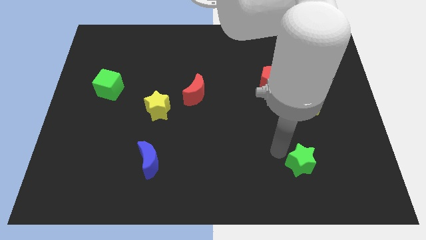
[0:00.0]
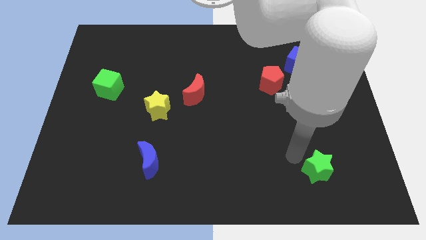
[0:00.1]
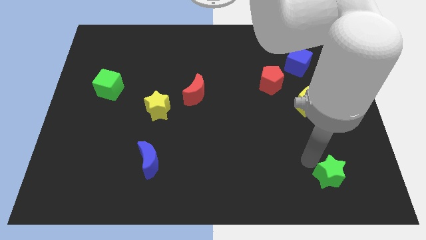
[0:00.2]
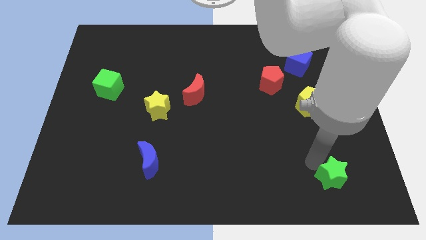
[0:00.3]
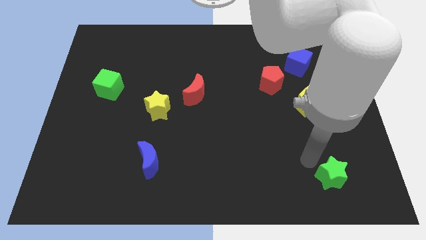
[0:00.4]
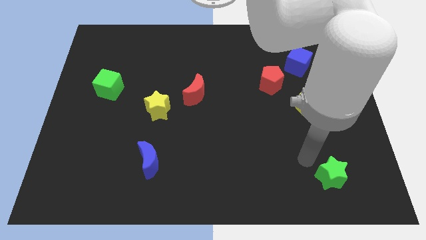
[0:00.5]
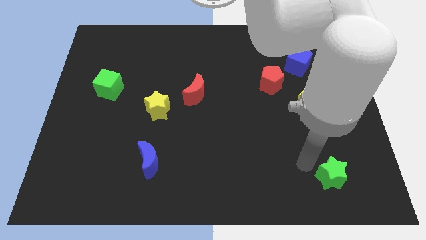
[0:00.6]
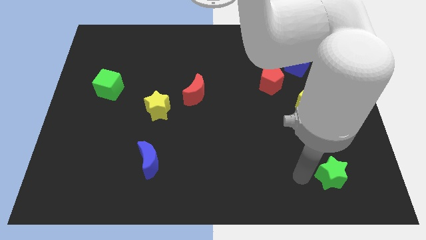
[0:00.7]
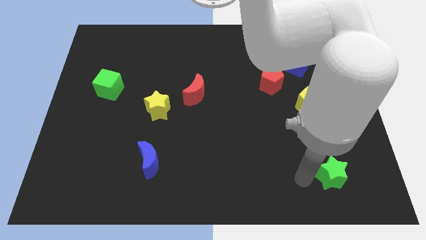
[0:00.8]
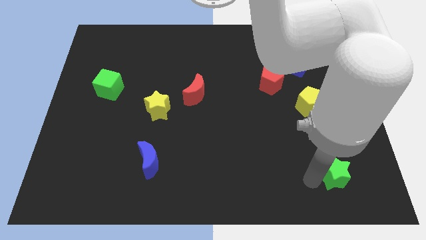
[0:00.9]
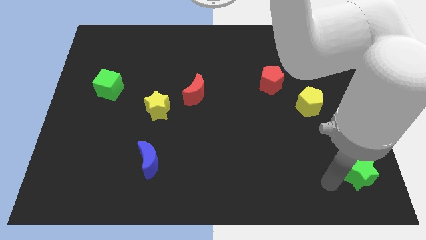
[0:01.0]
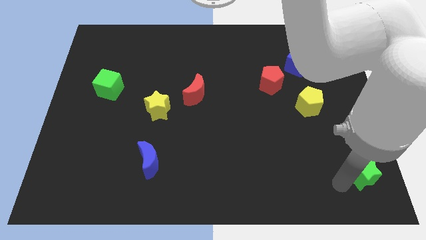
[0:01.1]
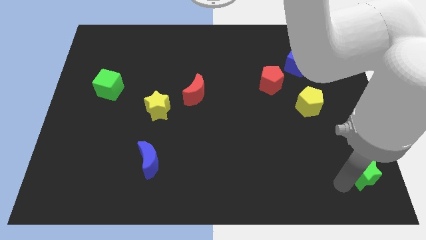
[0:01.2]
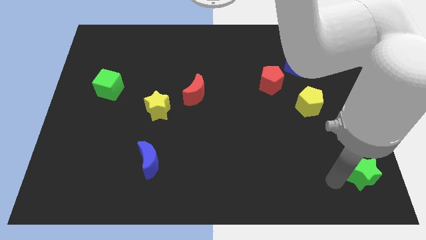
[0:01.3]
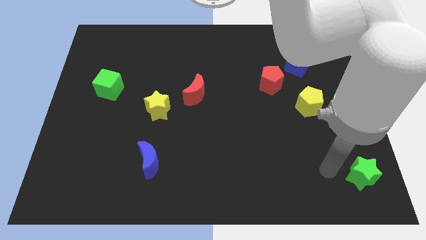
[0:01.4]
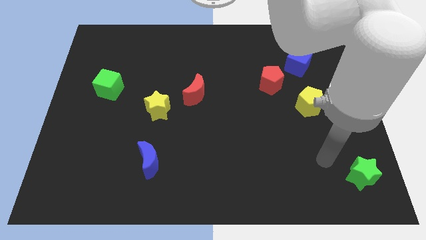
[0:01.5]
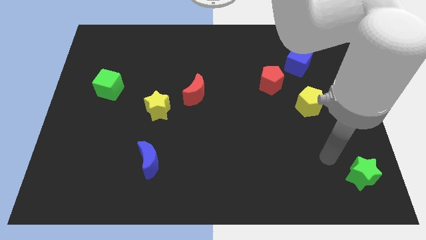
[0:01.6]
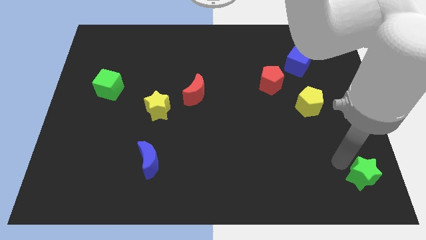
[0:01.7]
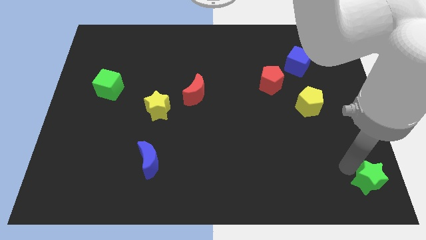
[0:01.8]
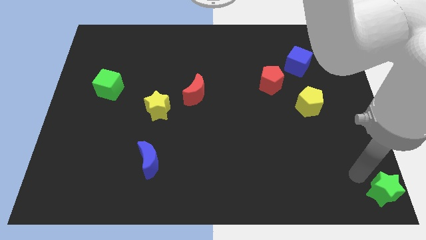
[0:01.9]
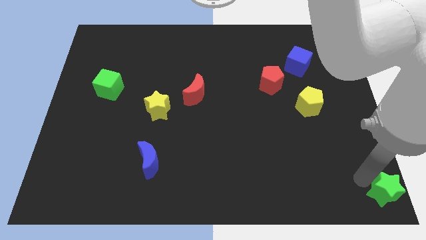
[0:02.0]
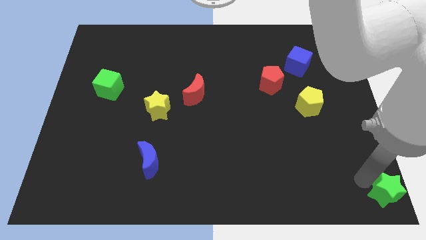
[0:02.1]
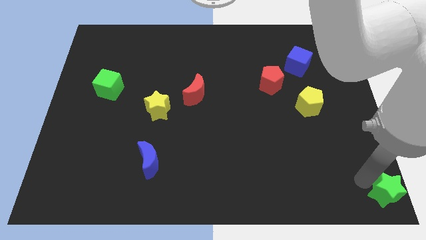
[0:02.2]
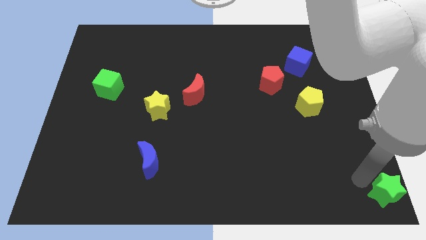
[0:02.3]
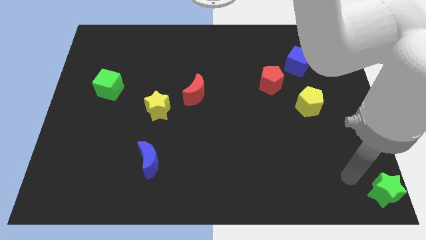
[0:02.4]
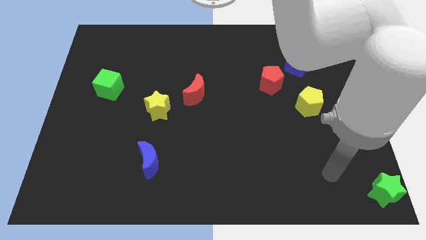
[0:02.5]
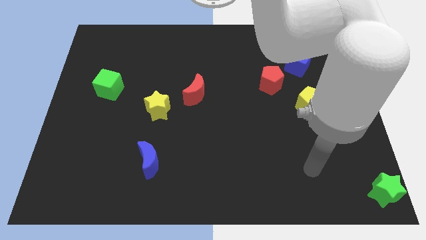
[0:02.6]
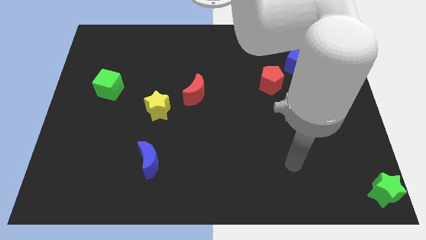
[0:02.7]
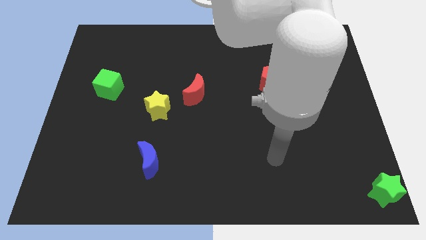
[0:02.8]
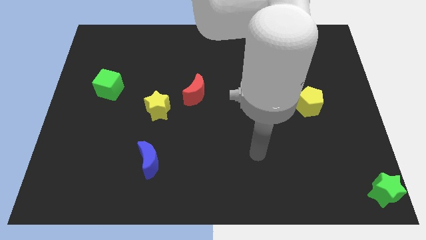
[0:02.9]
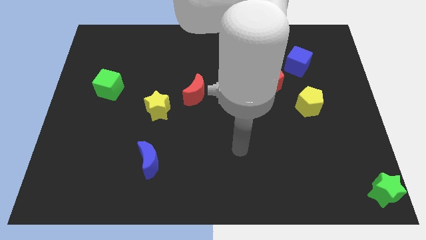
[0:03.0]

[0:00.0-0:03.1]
move the green star to the bottom right of the board

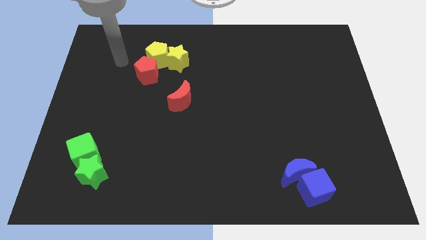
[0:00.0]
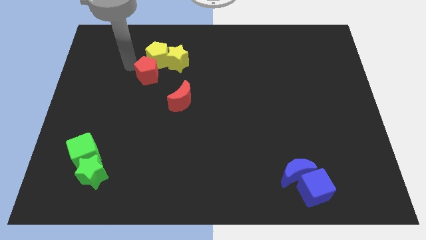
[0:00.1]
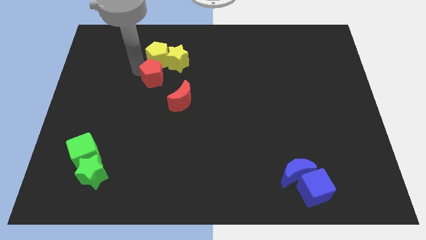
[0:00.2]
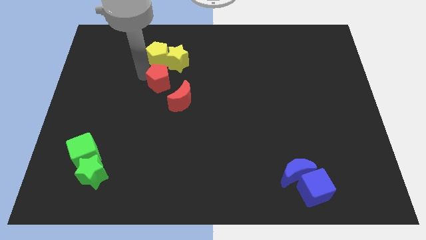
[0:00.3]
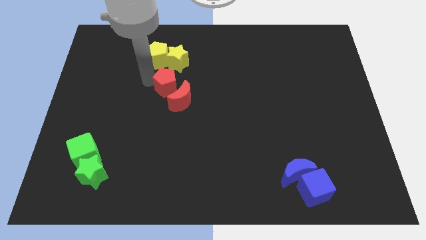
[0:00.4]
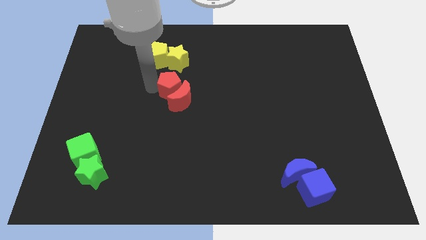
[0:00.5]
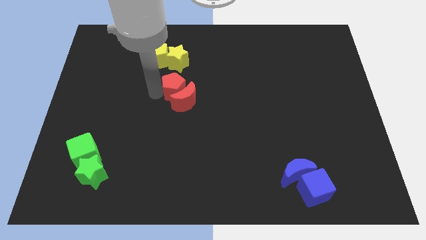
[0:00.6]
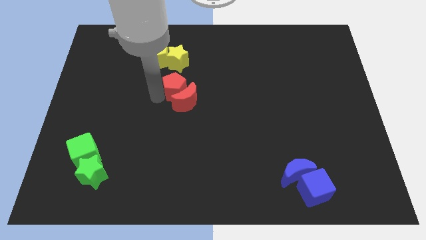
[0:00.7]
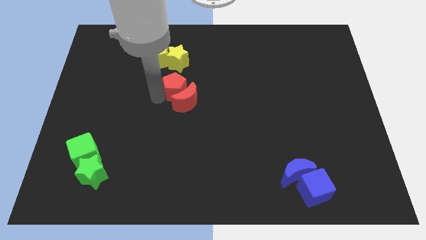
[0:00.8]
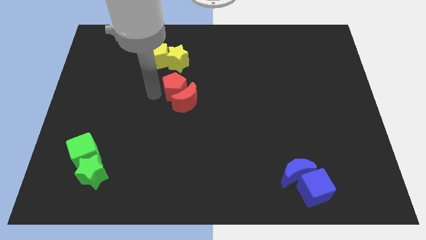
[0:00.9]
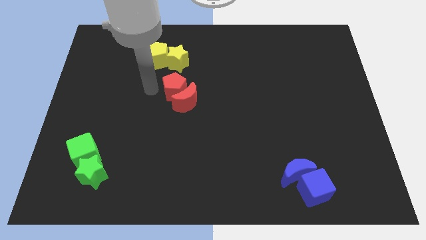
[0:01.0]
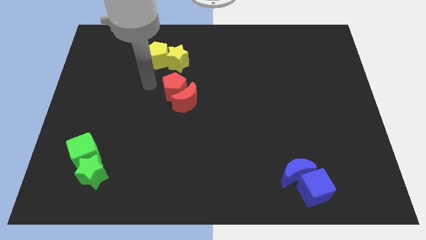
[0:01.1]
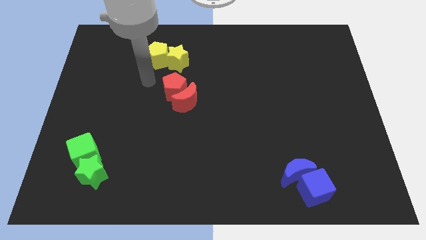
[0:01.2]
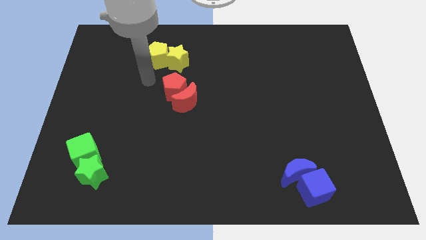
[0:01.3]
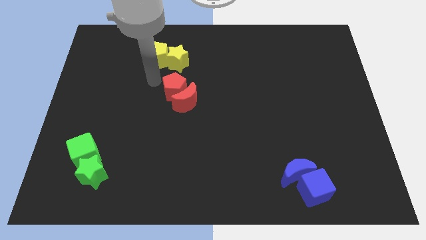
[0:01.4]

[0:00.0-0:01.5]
push the red pentagon into the top left side of the red moon

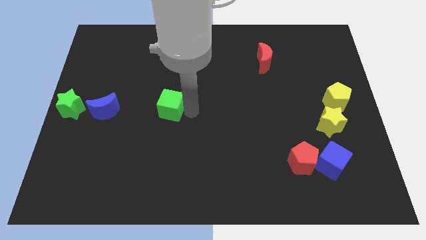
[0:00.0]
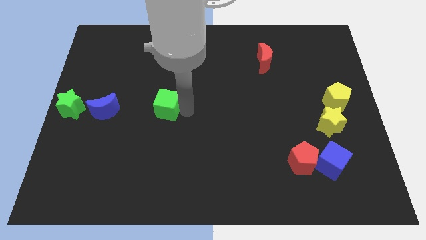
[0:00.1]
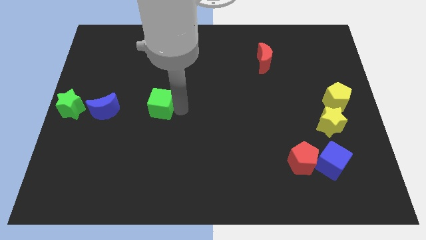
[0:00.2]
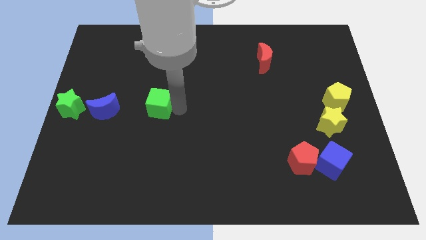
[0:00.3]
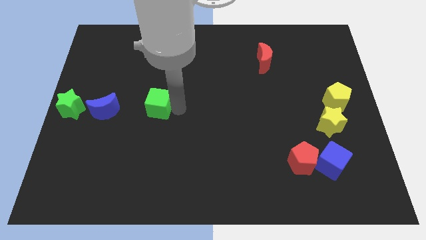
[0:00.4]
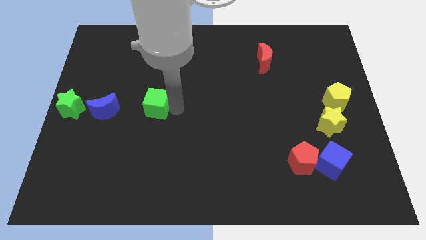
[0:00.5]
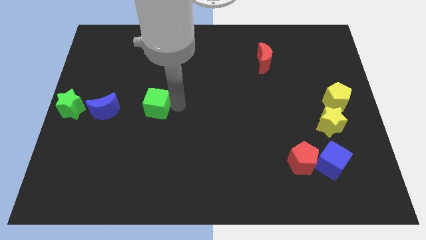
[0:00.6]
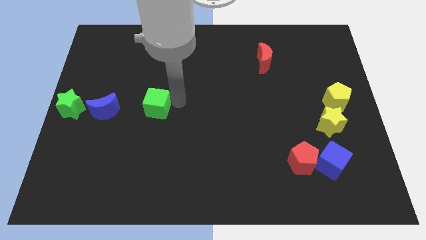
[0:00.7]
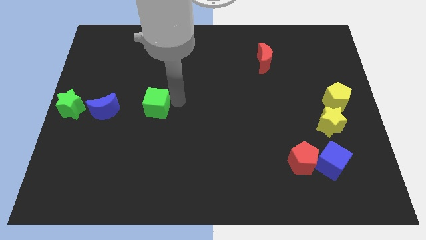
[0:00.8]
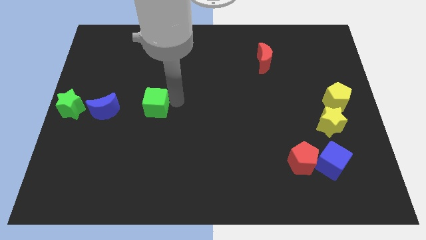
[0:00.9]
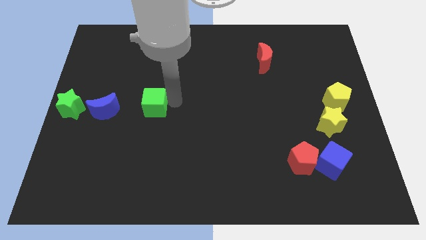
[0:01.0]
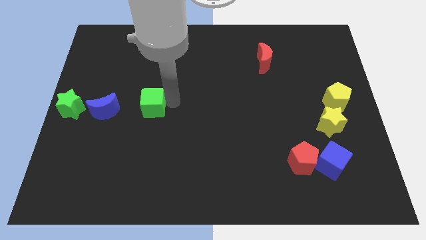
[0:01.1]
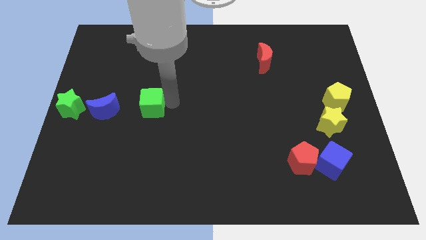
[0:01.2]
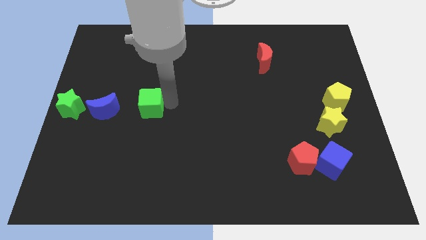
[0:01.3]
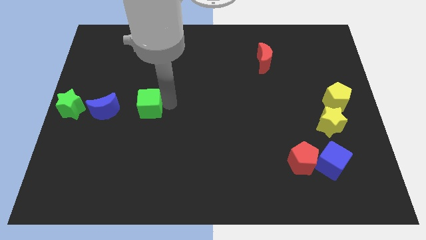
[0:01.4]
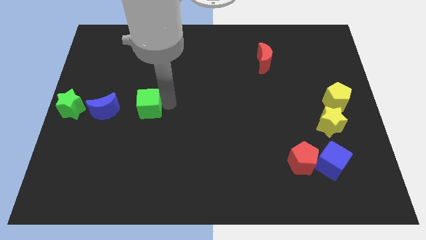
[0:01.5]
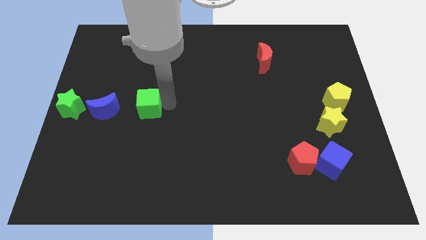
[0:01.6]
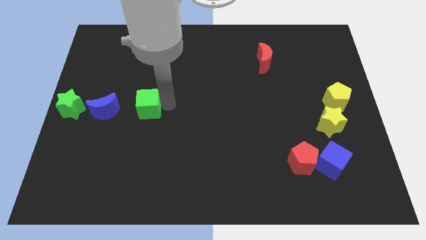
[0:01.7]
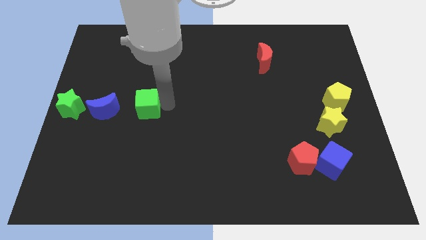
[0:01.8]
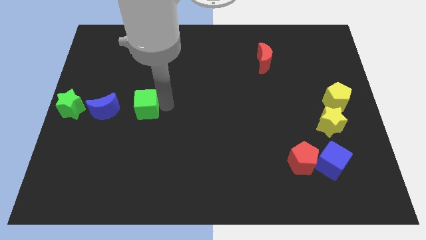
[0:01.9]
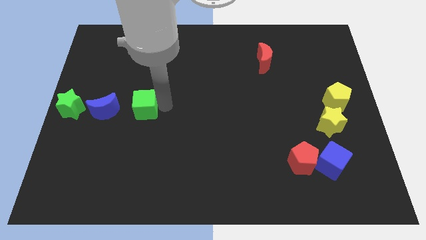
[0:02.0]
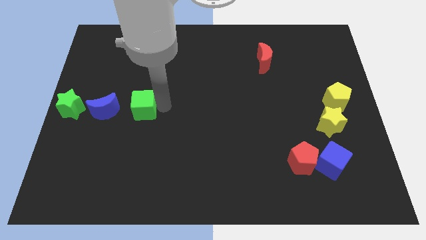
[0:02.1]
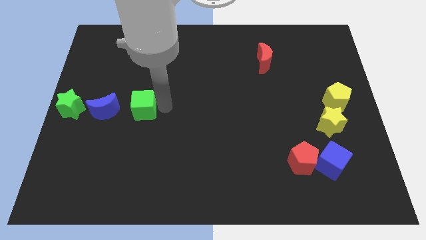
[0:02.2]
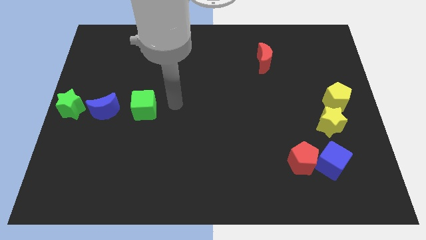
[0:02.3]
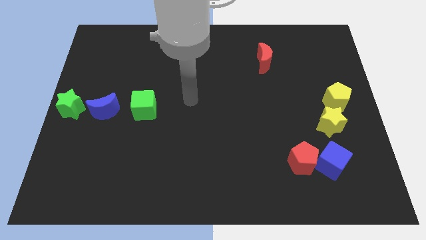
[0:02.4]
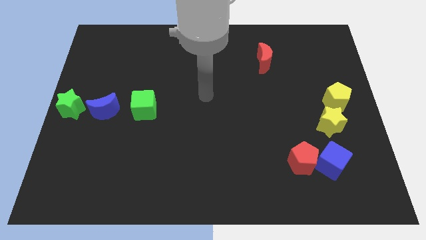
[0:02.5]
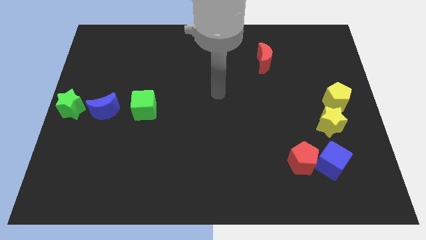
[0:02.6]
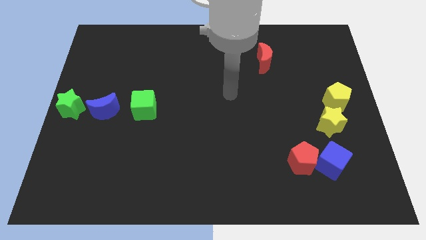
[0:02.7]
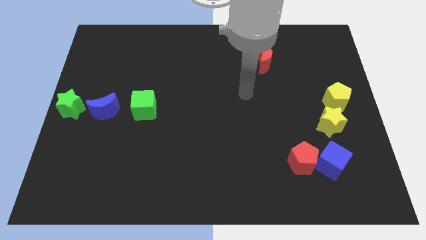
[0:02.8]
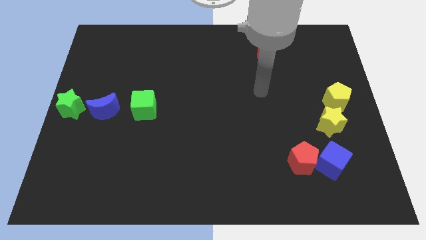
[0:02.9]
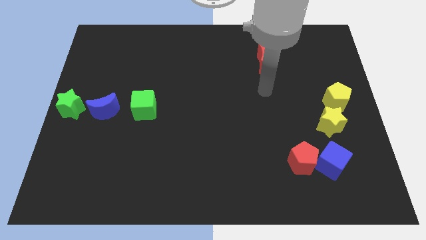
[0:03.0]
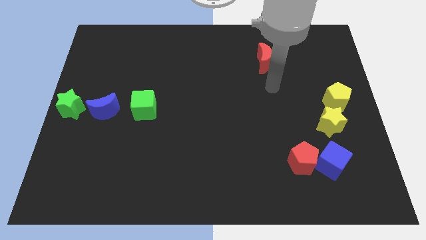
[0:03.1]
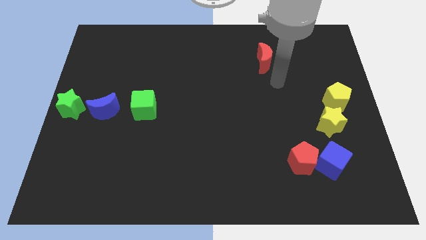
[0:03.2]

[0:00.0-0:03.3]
move the green cube closer to the blue moon

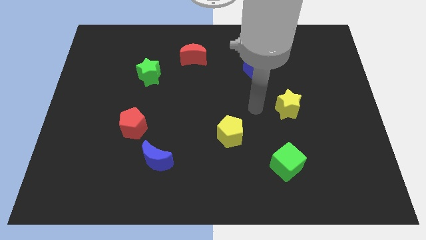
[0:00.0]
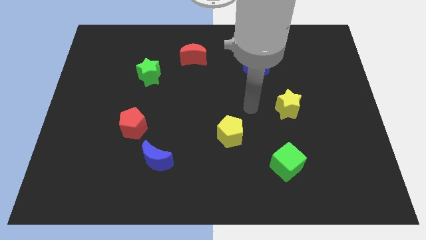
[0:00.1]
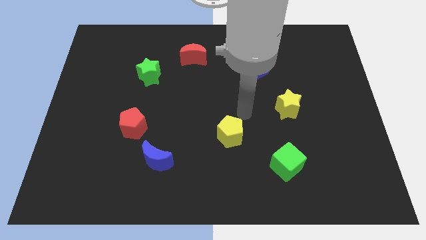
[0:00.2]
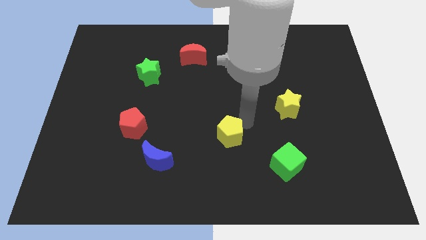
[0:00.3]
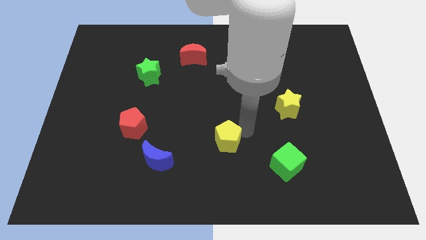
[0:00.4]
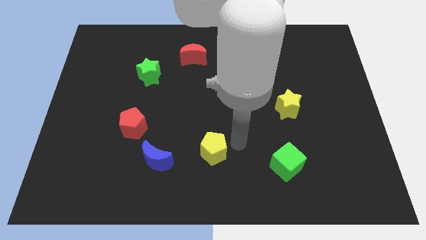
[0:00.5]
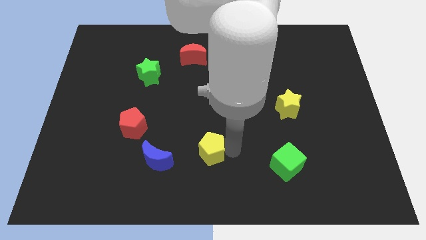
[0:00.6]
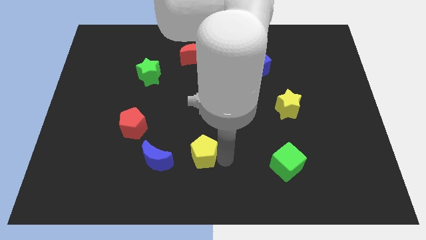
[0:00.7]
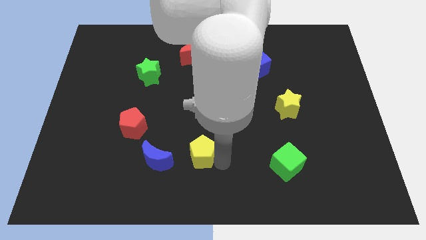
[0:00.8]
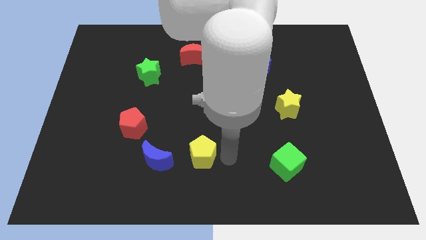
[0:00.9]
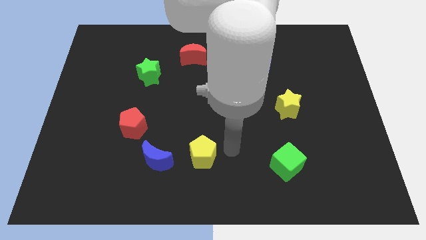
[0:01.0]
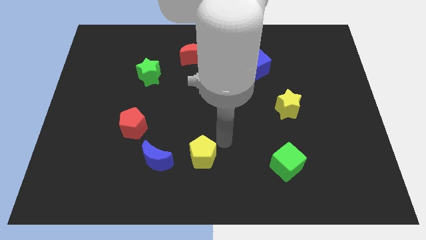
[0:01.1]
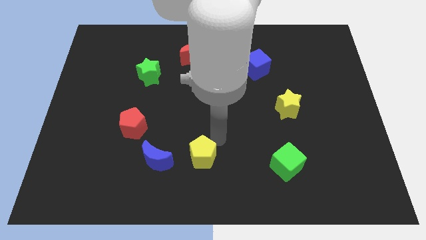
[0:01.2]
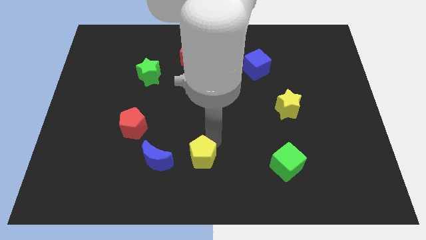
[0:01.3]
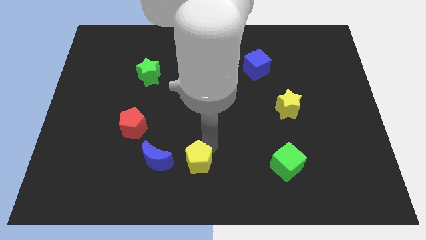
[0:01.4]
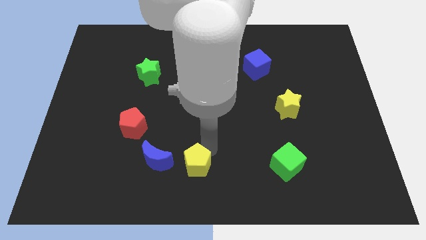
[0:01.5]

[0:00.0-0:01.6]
place the yellow pentagon to the left side of the blue semicircle
